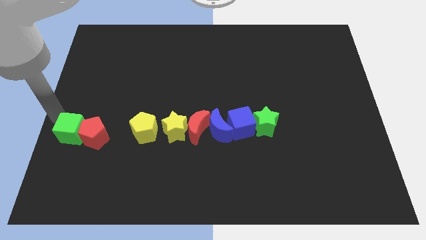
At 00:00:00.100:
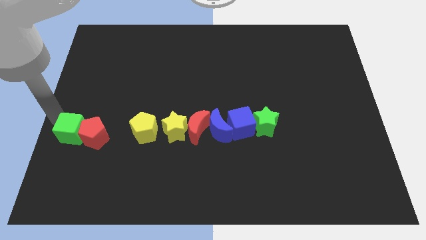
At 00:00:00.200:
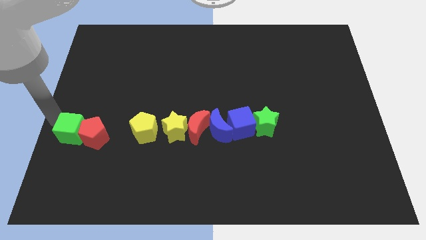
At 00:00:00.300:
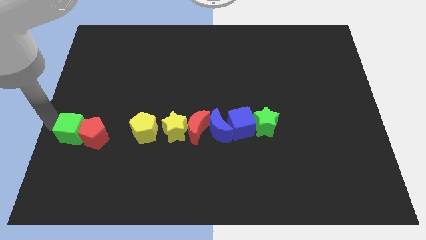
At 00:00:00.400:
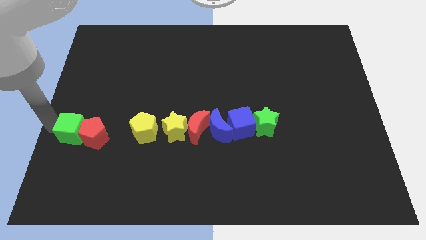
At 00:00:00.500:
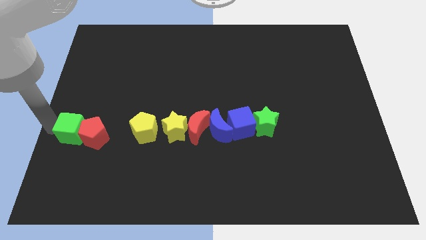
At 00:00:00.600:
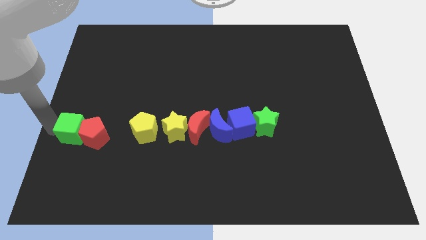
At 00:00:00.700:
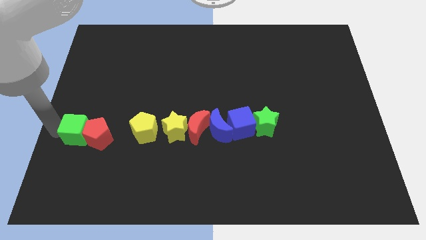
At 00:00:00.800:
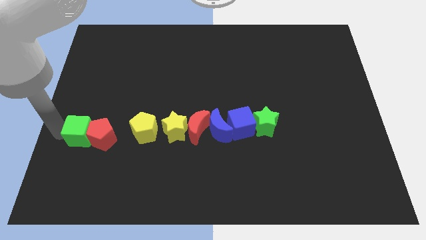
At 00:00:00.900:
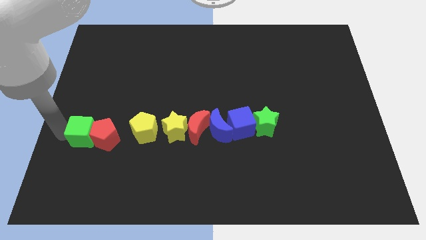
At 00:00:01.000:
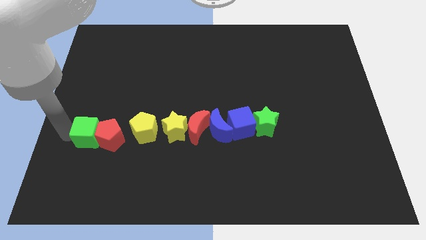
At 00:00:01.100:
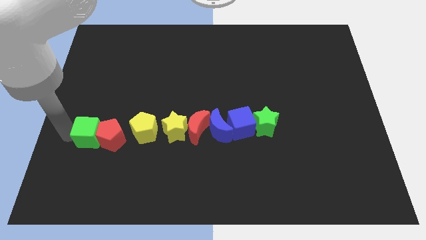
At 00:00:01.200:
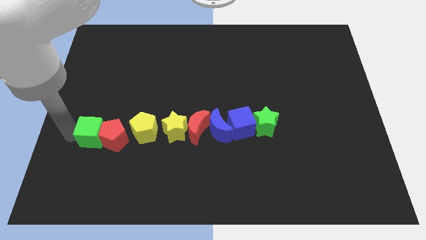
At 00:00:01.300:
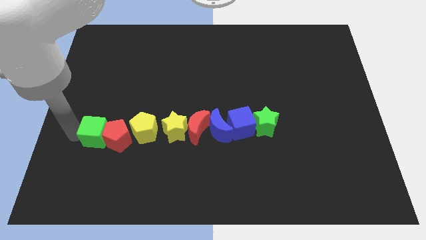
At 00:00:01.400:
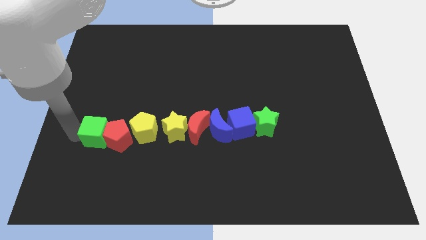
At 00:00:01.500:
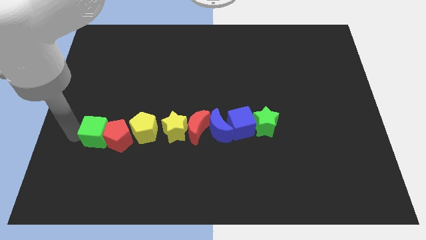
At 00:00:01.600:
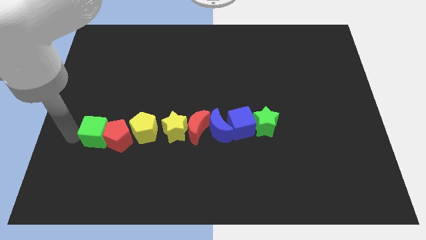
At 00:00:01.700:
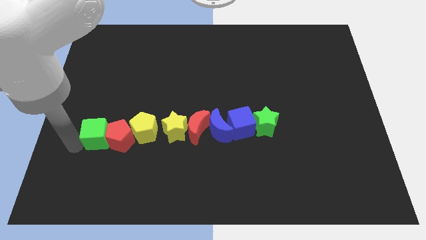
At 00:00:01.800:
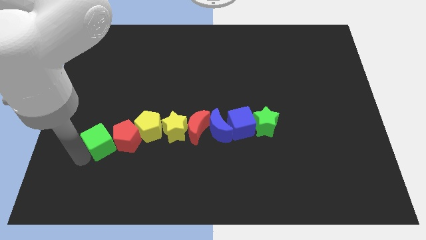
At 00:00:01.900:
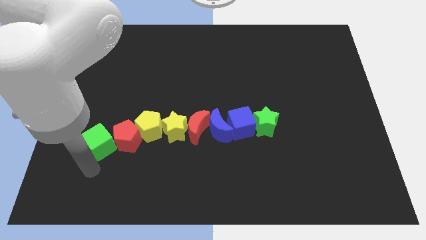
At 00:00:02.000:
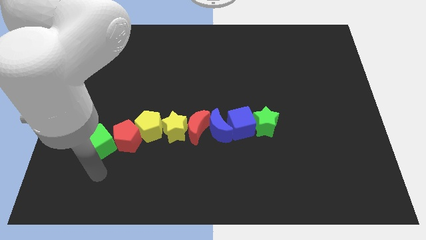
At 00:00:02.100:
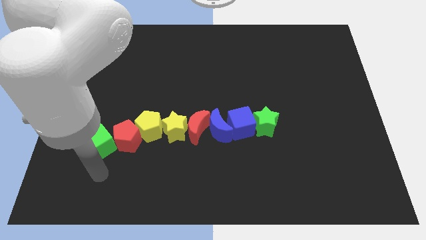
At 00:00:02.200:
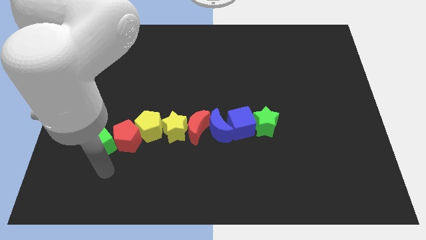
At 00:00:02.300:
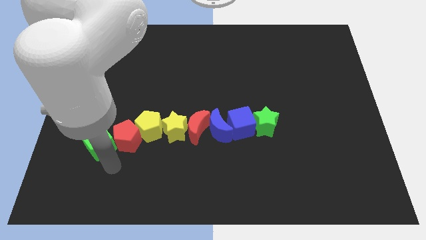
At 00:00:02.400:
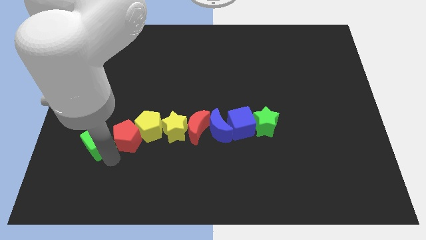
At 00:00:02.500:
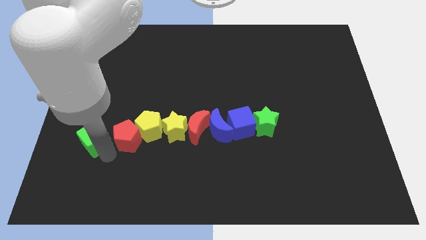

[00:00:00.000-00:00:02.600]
move the green cube to the left of the red pentagon

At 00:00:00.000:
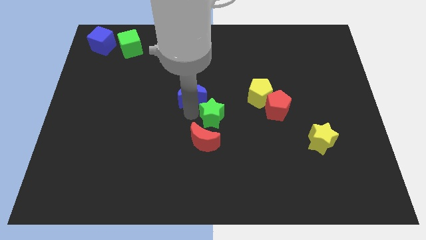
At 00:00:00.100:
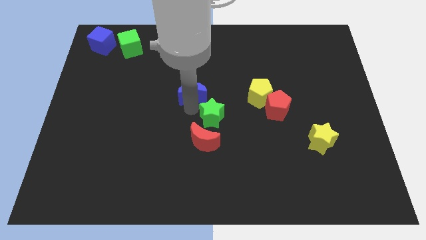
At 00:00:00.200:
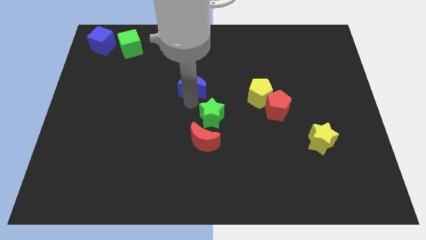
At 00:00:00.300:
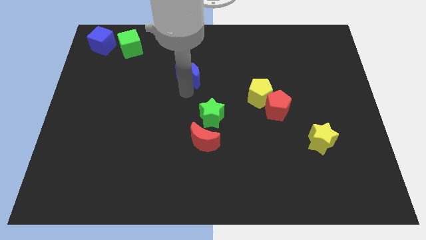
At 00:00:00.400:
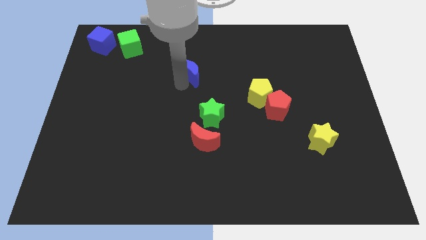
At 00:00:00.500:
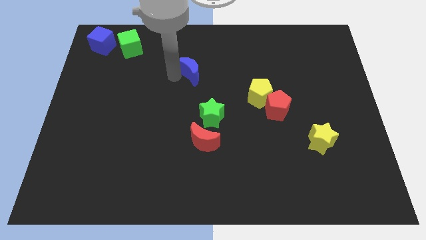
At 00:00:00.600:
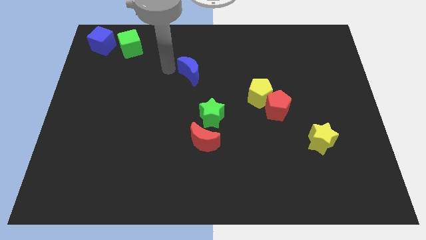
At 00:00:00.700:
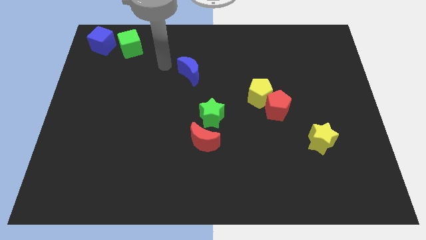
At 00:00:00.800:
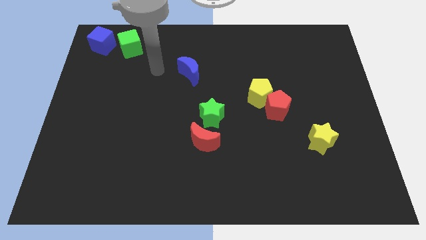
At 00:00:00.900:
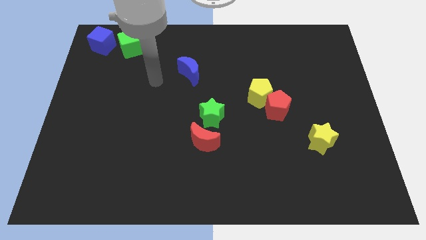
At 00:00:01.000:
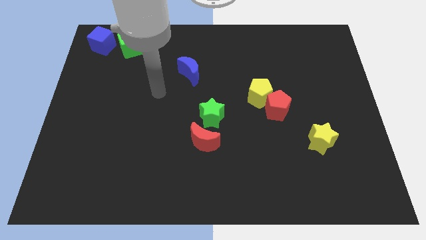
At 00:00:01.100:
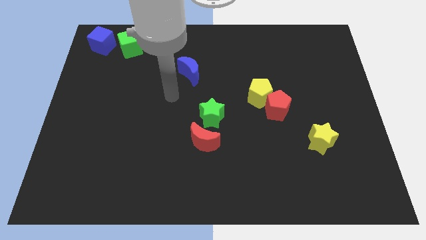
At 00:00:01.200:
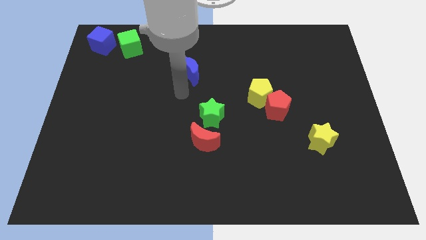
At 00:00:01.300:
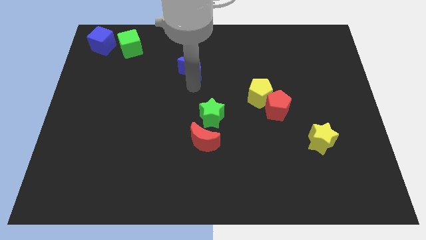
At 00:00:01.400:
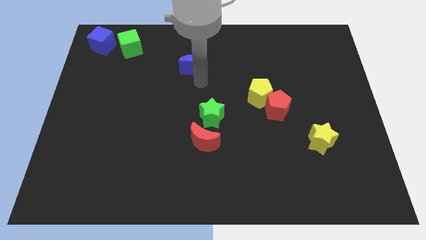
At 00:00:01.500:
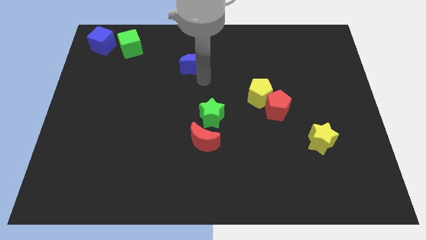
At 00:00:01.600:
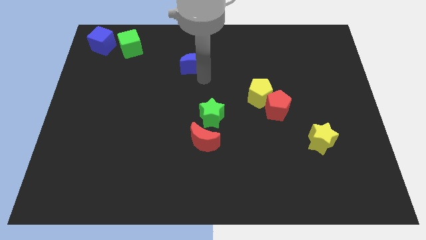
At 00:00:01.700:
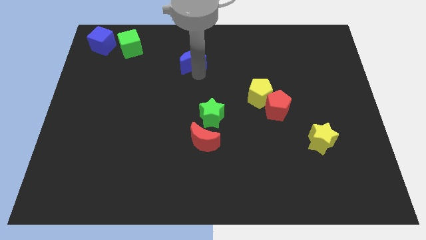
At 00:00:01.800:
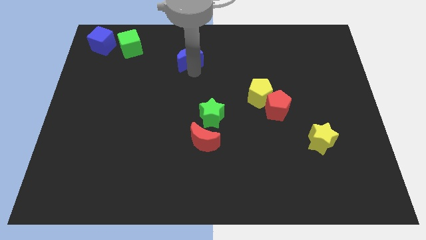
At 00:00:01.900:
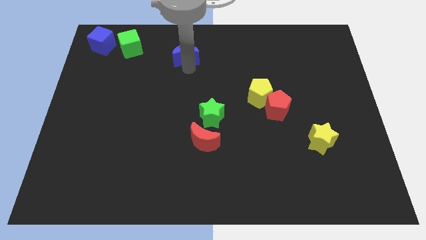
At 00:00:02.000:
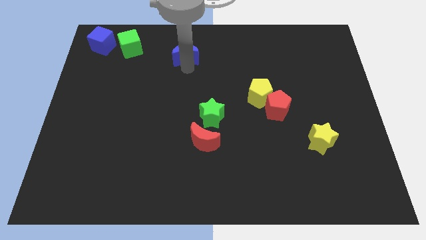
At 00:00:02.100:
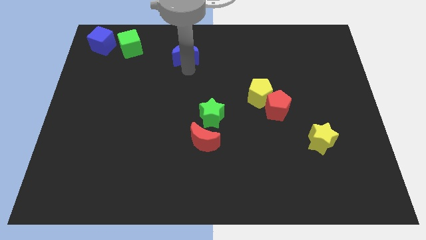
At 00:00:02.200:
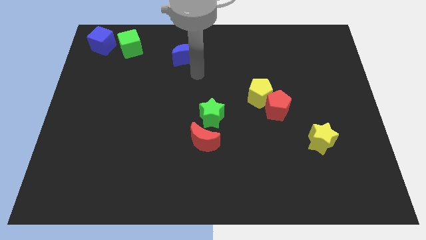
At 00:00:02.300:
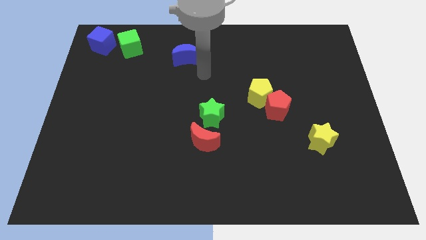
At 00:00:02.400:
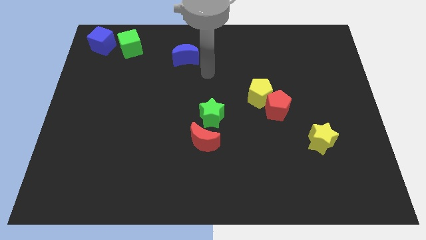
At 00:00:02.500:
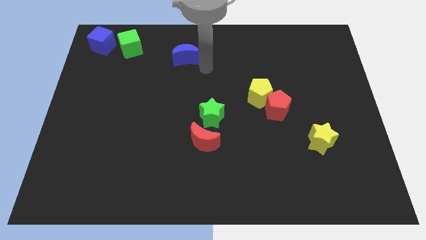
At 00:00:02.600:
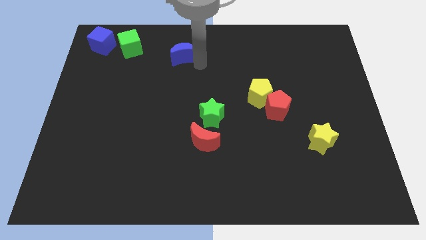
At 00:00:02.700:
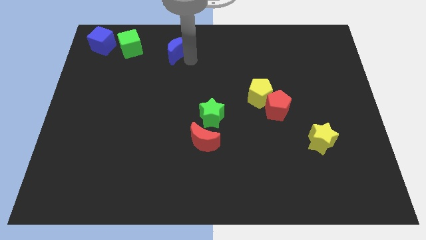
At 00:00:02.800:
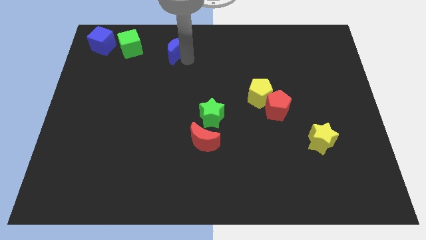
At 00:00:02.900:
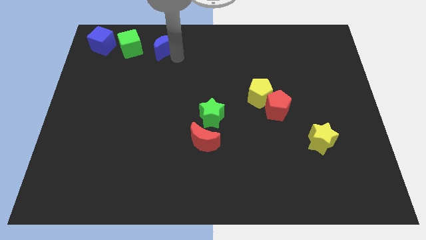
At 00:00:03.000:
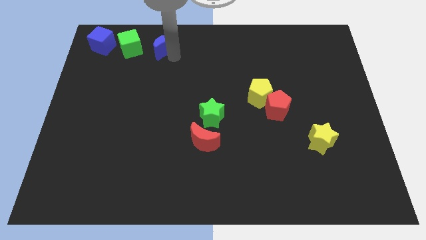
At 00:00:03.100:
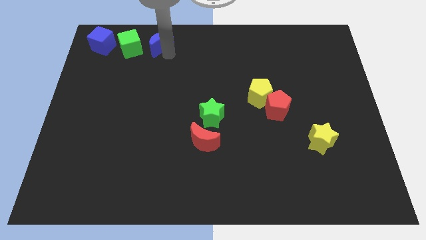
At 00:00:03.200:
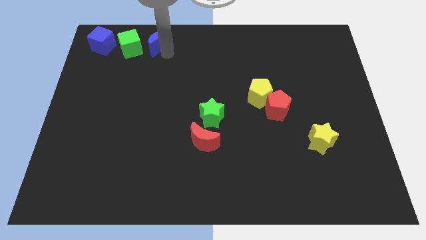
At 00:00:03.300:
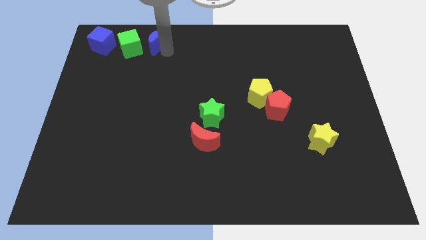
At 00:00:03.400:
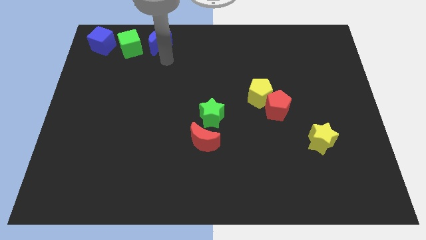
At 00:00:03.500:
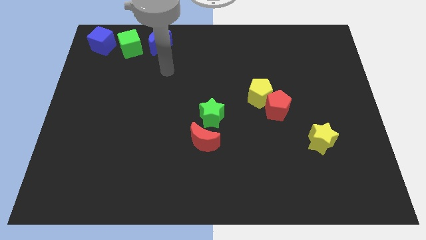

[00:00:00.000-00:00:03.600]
place blue moon beside green cube

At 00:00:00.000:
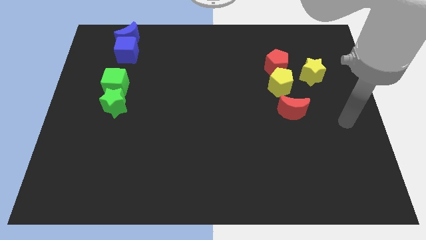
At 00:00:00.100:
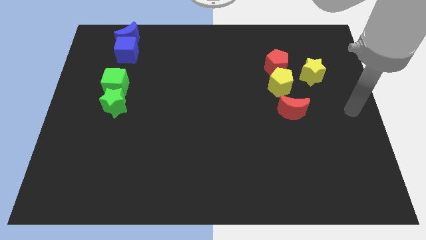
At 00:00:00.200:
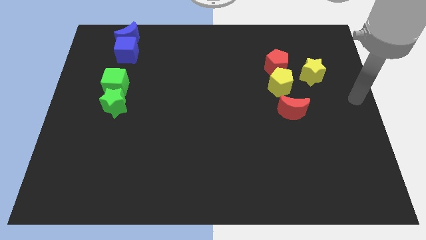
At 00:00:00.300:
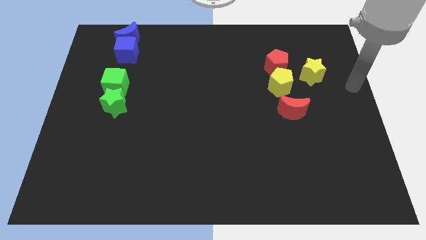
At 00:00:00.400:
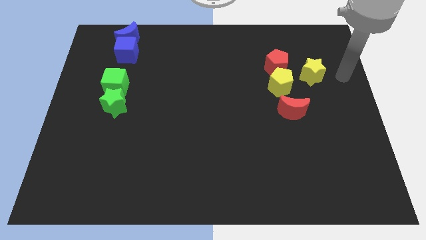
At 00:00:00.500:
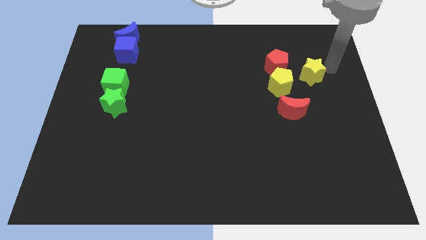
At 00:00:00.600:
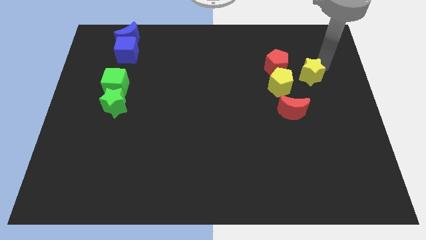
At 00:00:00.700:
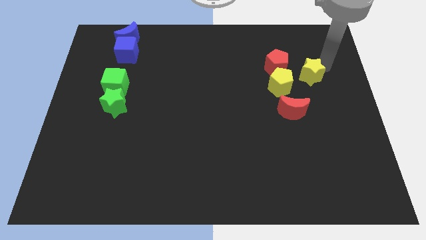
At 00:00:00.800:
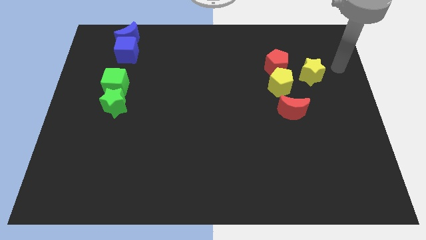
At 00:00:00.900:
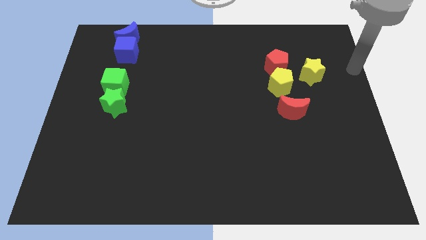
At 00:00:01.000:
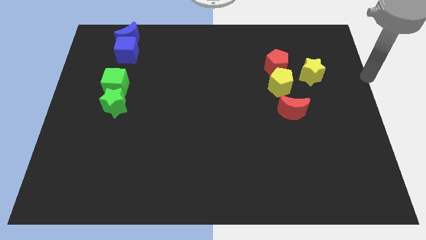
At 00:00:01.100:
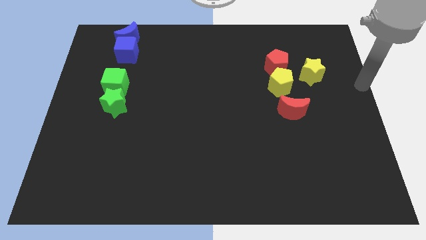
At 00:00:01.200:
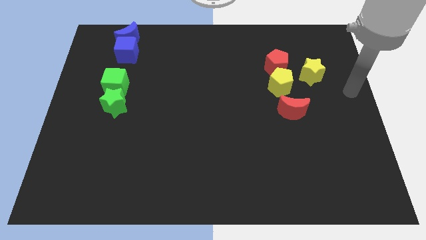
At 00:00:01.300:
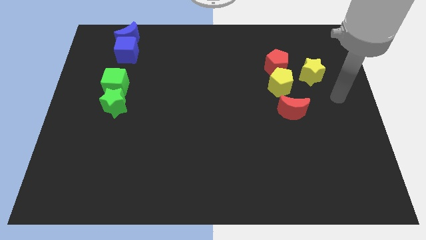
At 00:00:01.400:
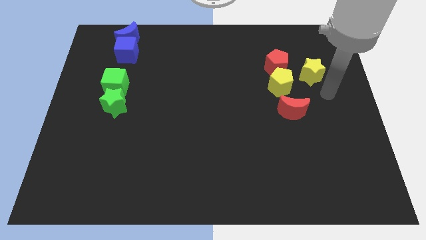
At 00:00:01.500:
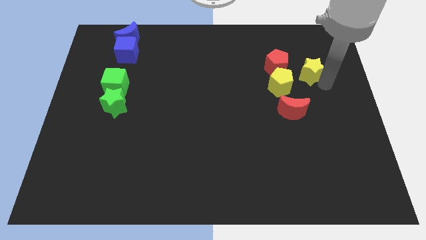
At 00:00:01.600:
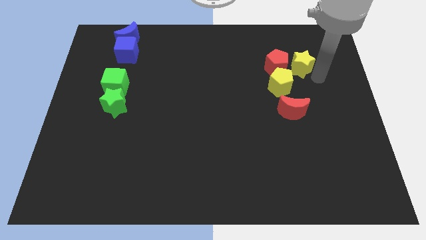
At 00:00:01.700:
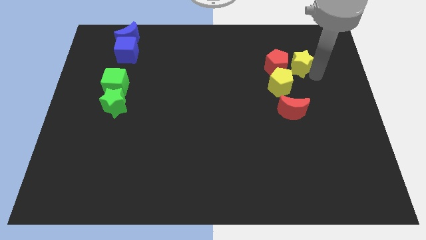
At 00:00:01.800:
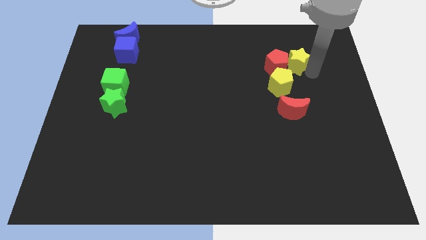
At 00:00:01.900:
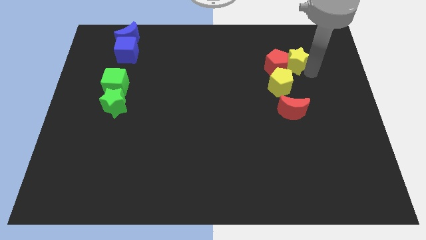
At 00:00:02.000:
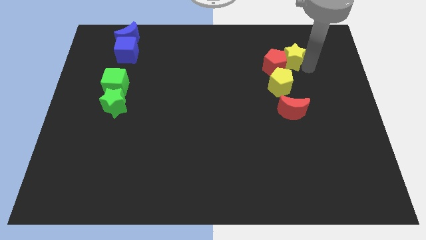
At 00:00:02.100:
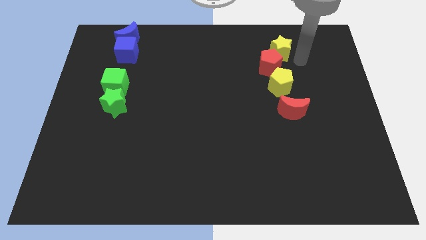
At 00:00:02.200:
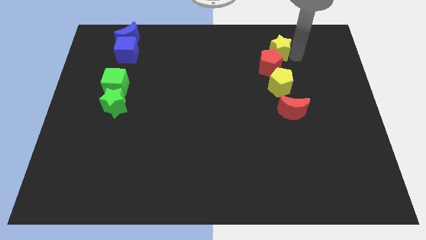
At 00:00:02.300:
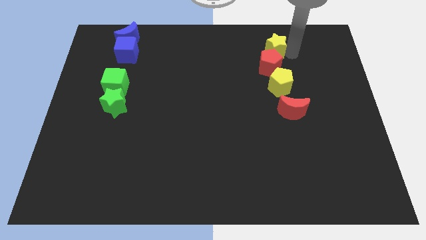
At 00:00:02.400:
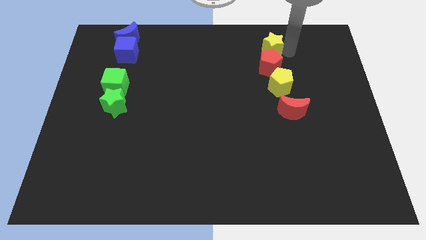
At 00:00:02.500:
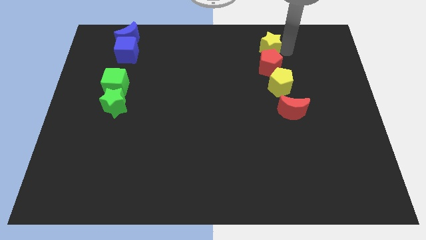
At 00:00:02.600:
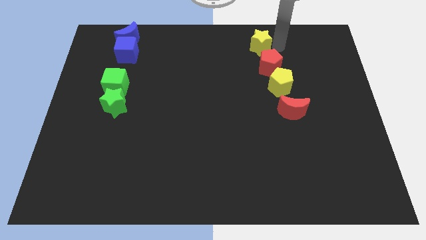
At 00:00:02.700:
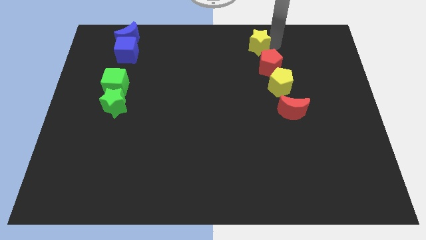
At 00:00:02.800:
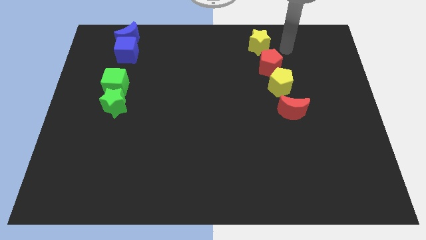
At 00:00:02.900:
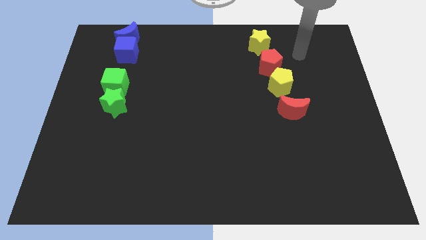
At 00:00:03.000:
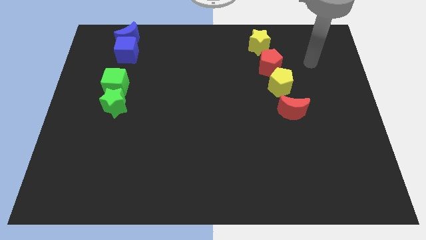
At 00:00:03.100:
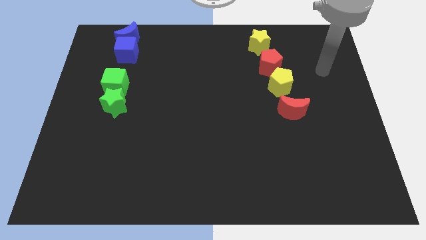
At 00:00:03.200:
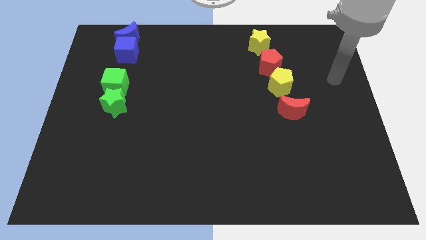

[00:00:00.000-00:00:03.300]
slide the yellow star towards top side
